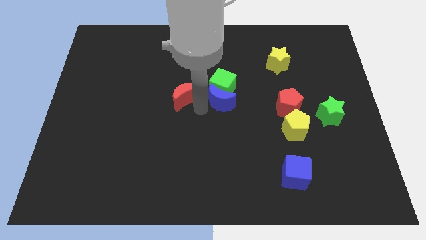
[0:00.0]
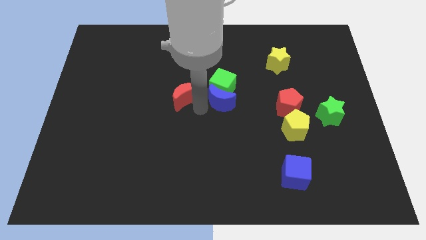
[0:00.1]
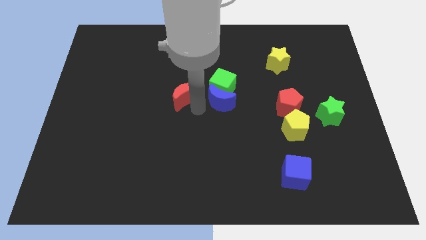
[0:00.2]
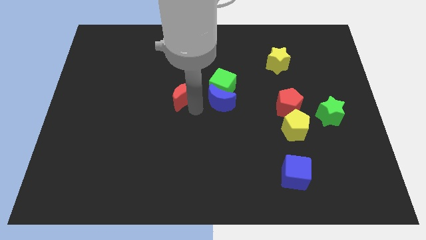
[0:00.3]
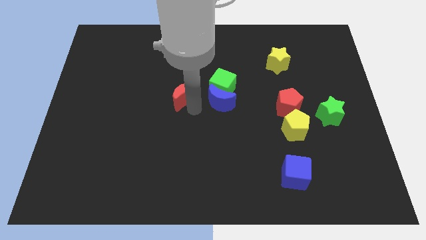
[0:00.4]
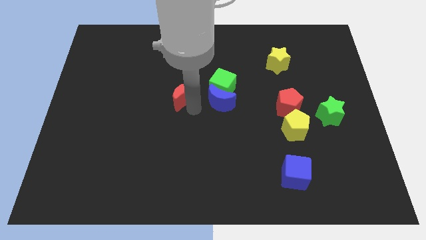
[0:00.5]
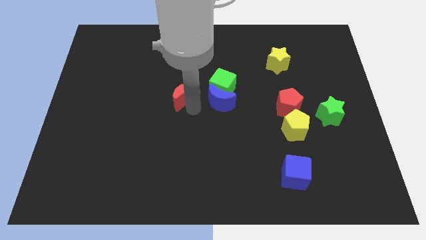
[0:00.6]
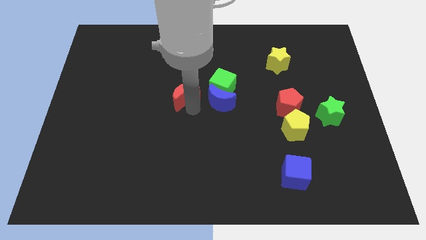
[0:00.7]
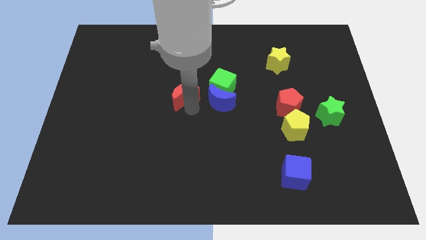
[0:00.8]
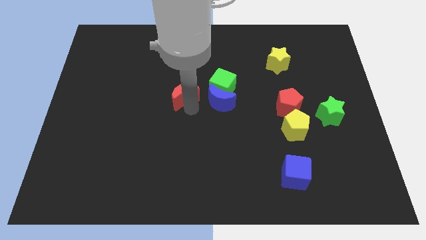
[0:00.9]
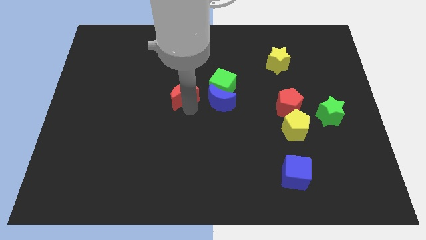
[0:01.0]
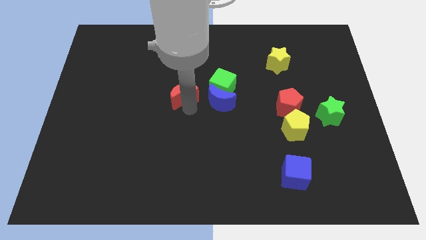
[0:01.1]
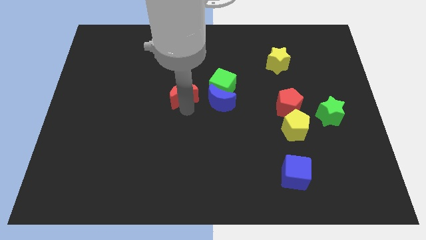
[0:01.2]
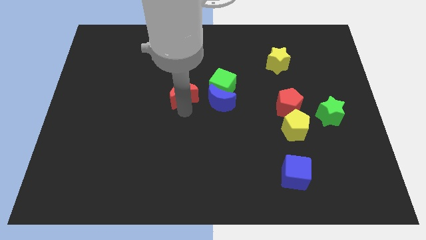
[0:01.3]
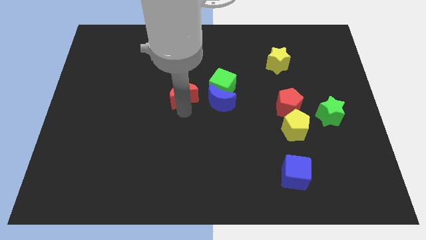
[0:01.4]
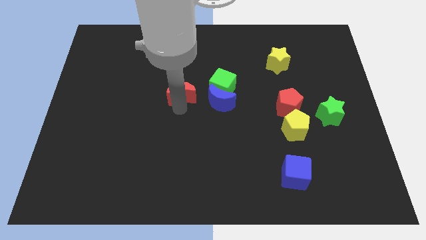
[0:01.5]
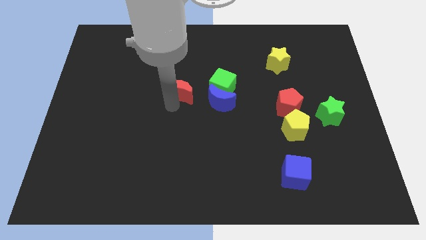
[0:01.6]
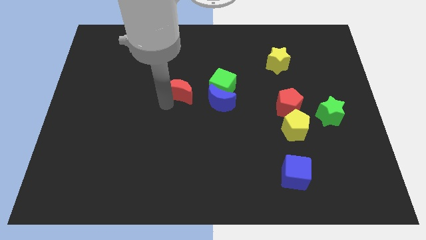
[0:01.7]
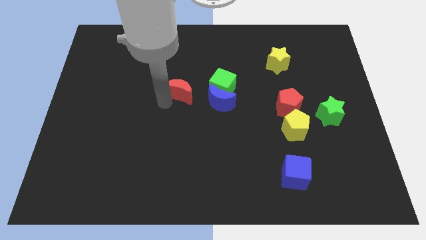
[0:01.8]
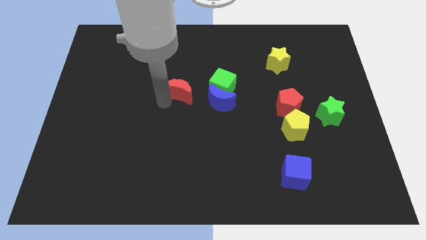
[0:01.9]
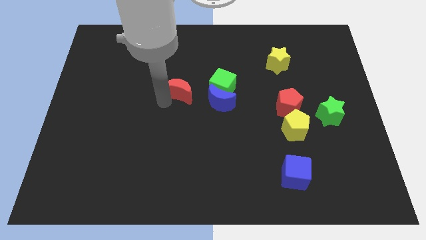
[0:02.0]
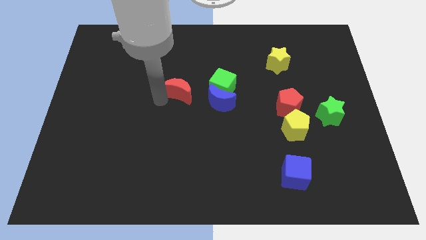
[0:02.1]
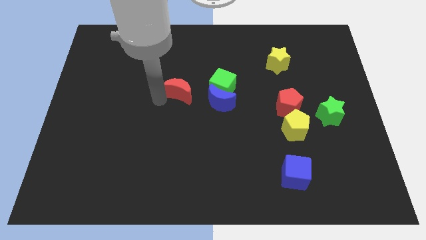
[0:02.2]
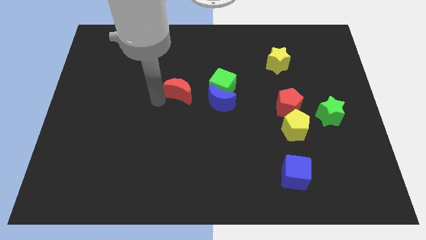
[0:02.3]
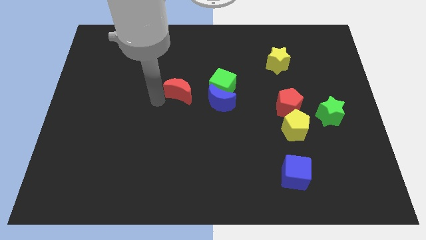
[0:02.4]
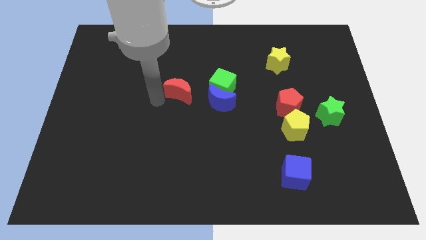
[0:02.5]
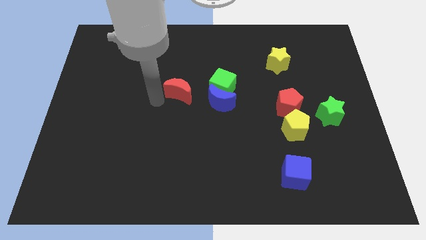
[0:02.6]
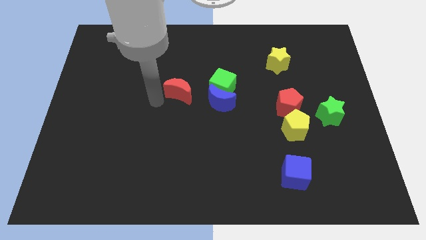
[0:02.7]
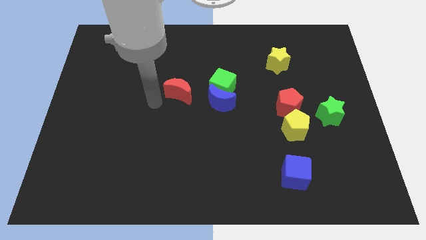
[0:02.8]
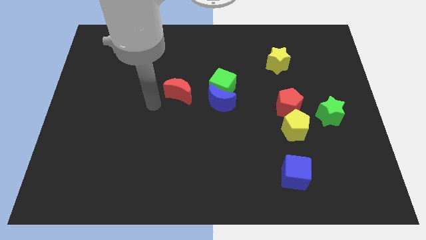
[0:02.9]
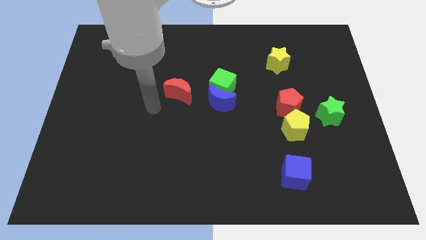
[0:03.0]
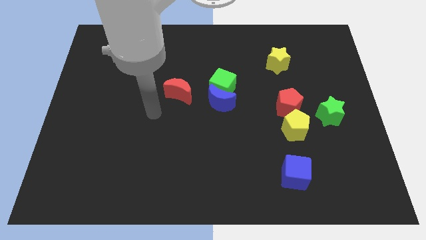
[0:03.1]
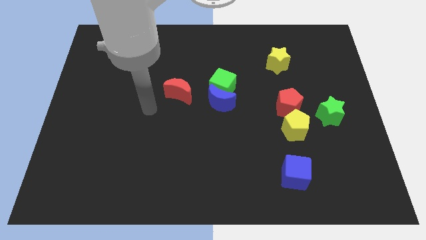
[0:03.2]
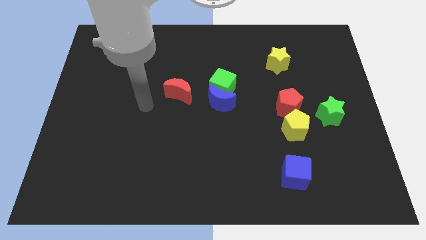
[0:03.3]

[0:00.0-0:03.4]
move the red crescent slightly towards the left

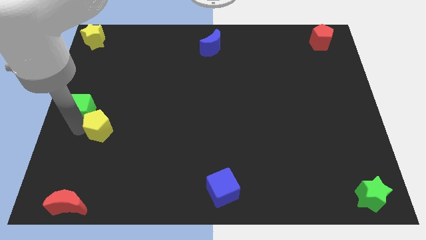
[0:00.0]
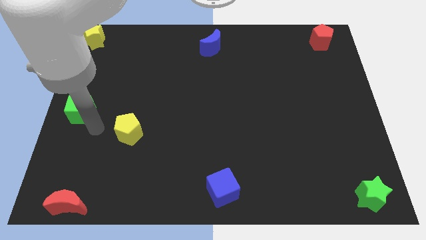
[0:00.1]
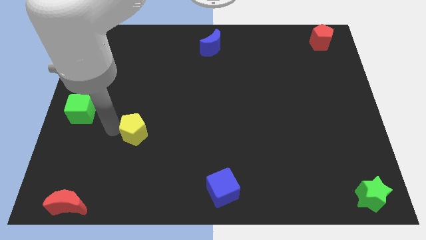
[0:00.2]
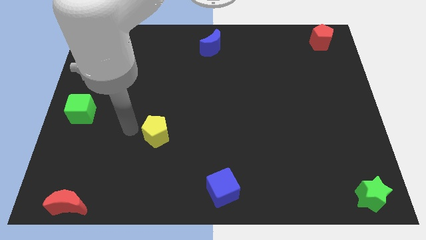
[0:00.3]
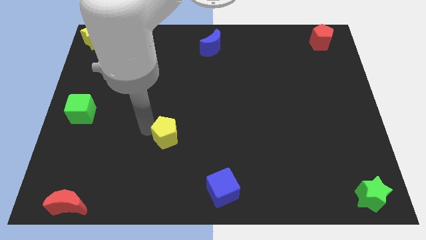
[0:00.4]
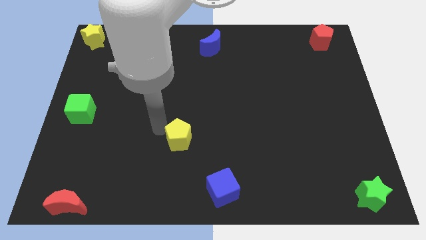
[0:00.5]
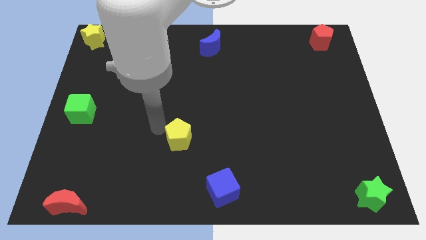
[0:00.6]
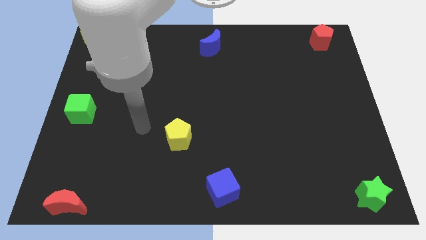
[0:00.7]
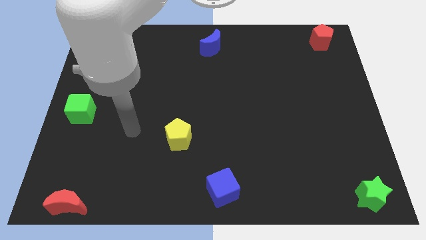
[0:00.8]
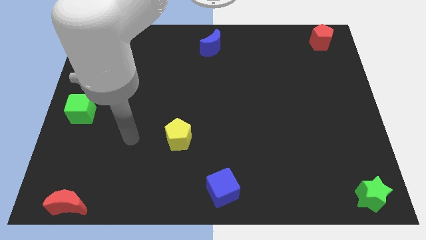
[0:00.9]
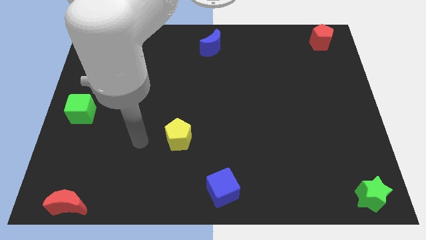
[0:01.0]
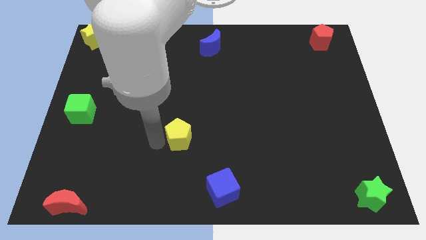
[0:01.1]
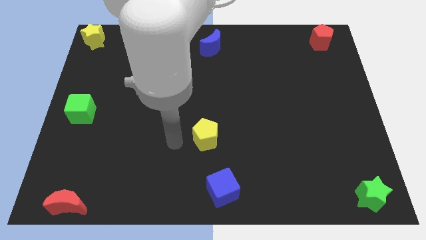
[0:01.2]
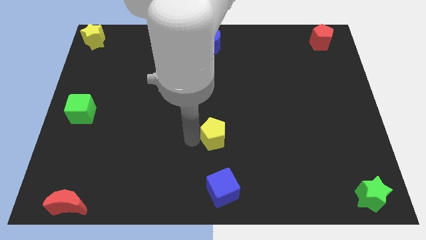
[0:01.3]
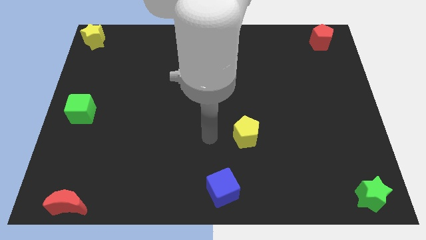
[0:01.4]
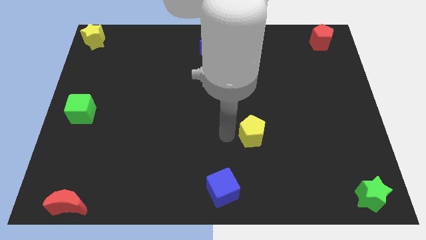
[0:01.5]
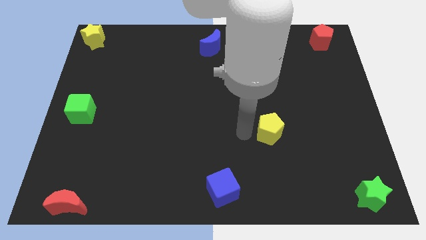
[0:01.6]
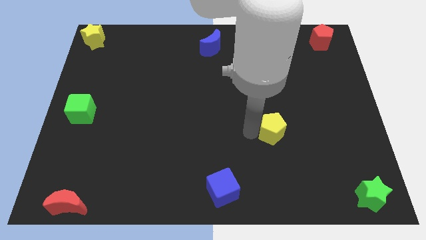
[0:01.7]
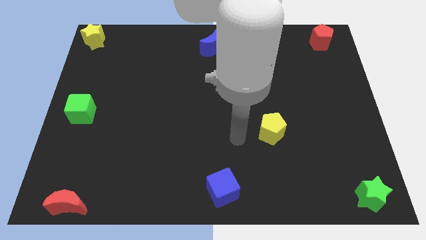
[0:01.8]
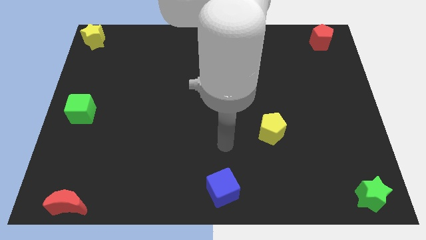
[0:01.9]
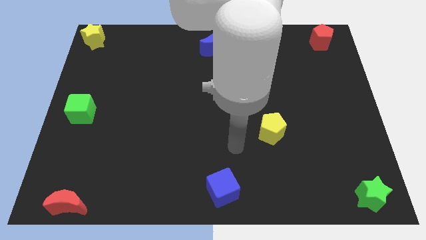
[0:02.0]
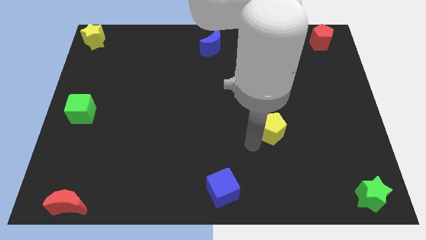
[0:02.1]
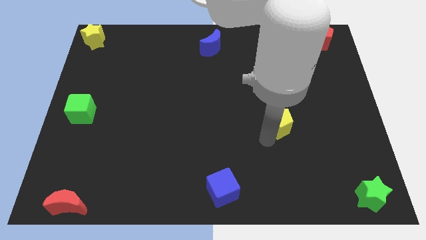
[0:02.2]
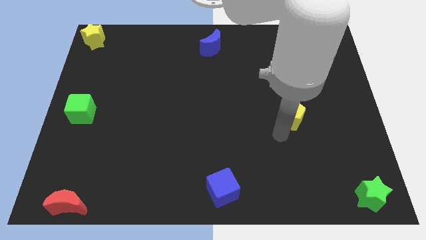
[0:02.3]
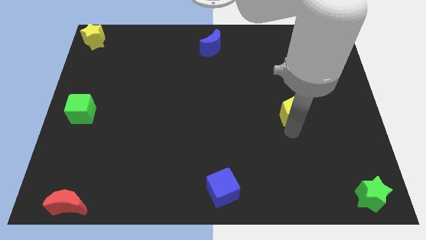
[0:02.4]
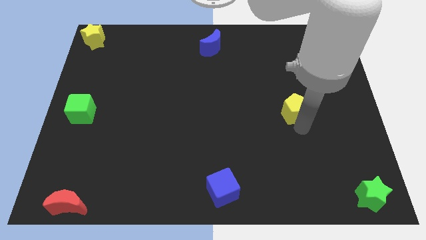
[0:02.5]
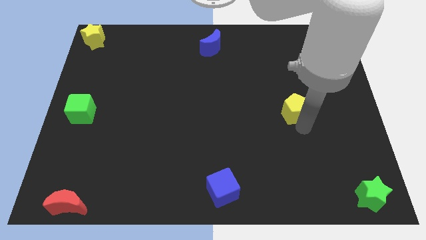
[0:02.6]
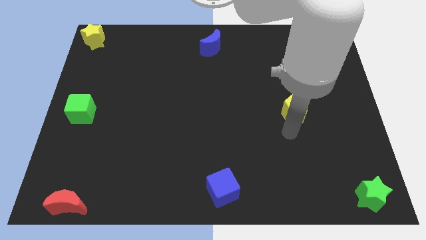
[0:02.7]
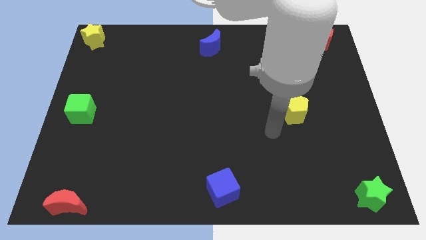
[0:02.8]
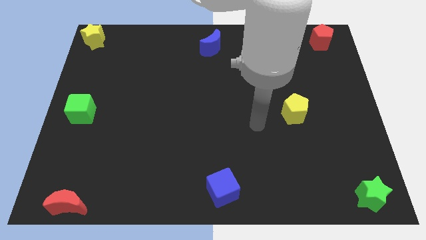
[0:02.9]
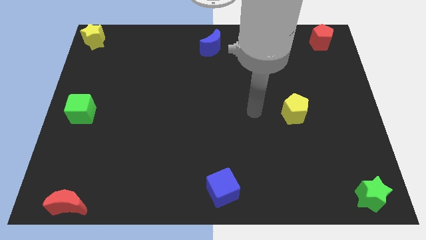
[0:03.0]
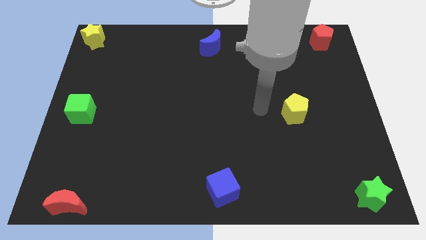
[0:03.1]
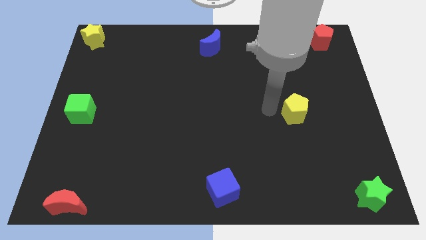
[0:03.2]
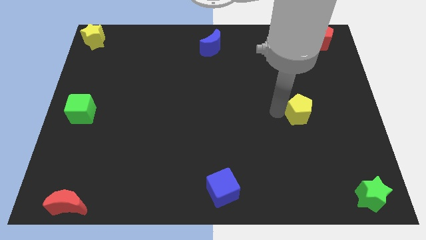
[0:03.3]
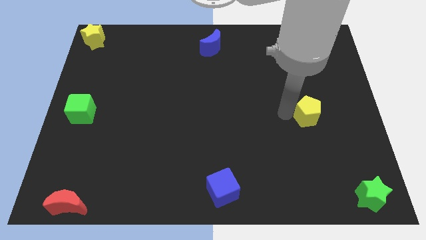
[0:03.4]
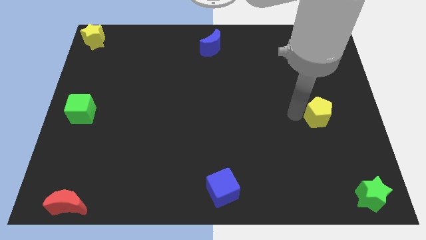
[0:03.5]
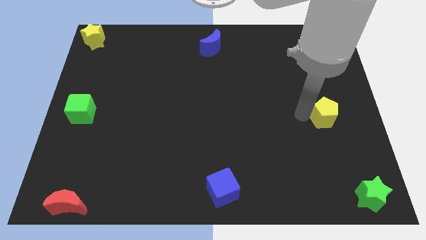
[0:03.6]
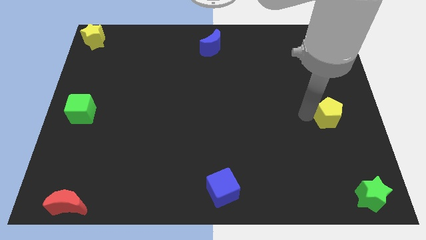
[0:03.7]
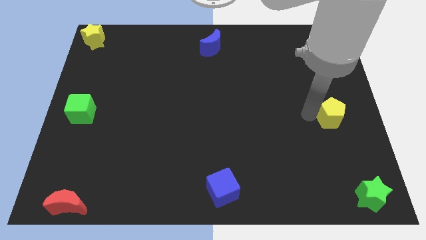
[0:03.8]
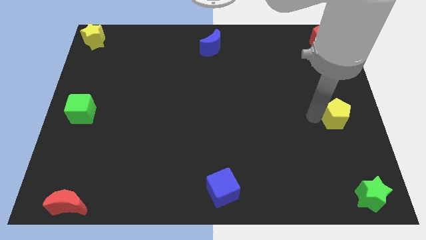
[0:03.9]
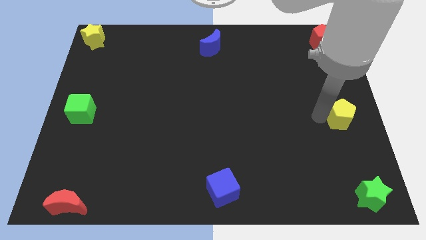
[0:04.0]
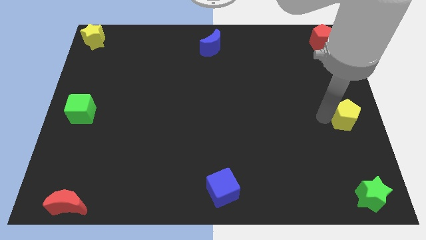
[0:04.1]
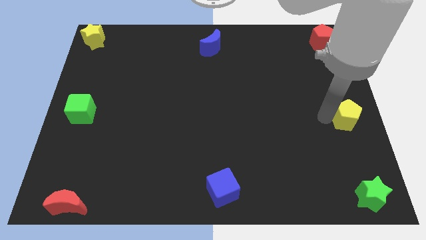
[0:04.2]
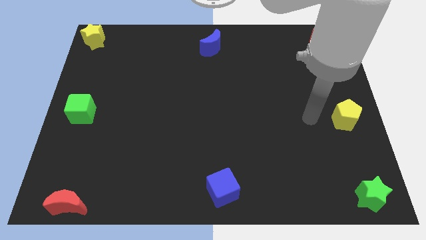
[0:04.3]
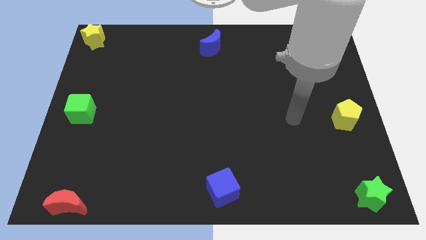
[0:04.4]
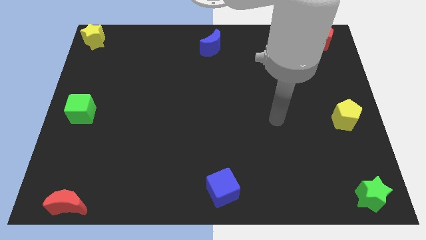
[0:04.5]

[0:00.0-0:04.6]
place the yellow pentagon above the green star

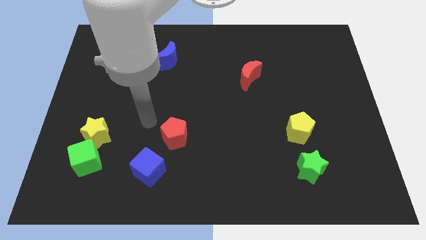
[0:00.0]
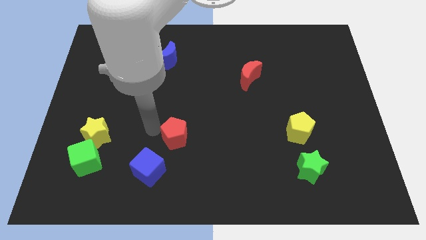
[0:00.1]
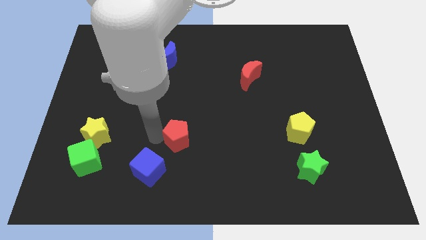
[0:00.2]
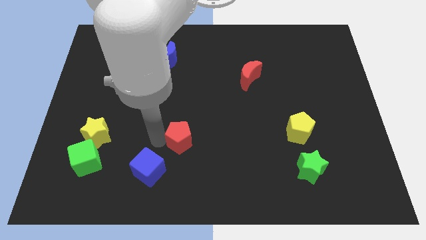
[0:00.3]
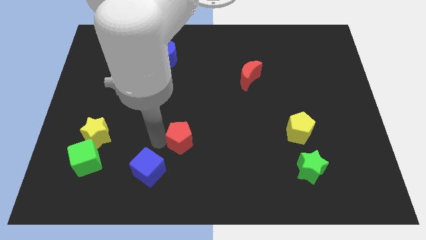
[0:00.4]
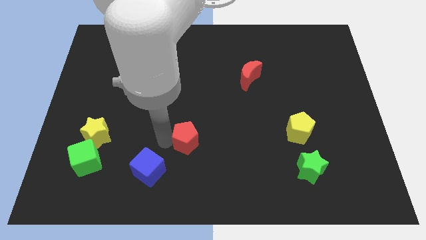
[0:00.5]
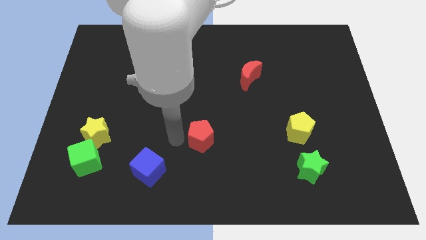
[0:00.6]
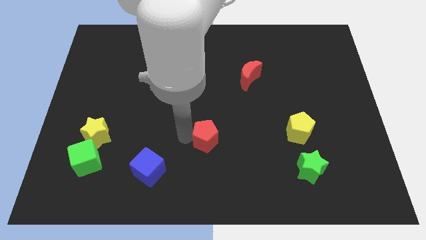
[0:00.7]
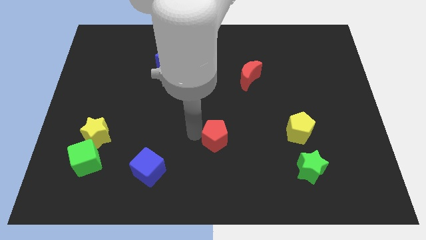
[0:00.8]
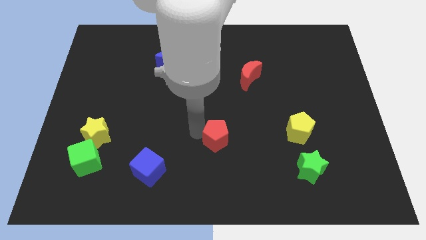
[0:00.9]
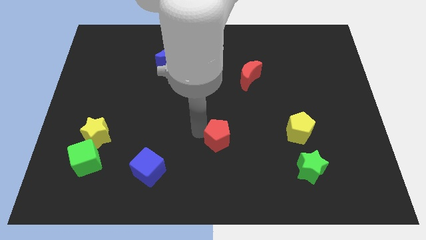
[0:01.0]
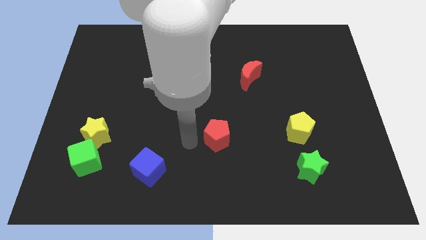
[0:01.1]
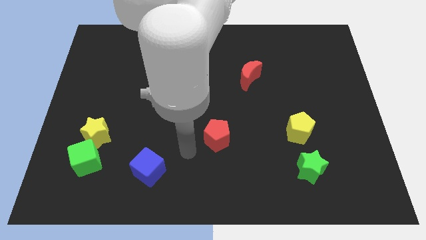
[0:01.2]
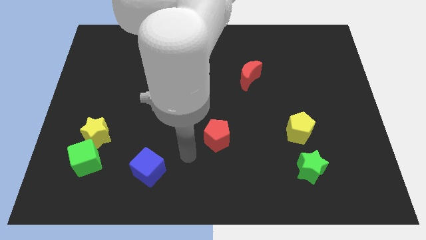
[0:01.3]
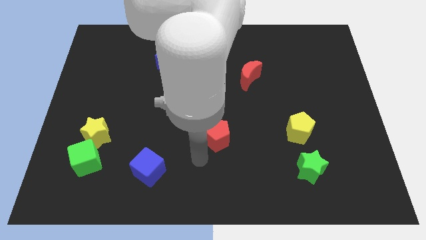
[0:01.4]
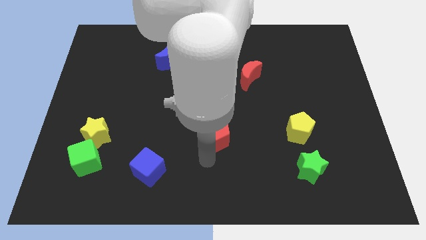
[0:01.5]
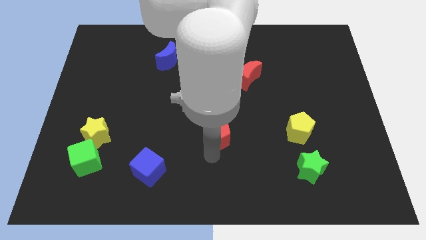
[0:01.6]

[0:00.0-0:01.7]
place the red pentagon horizontally to the left side of the yellow pentagon
